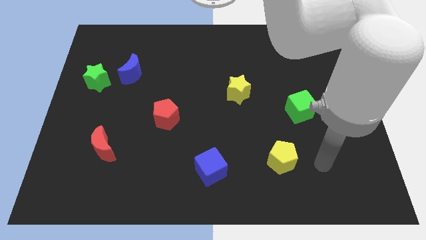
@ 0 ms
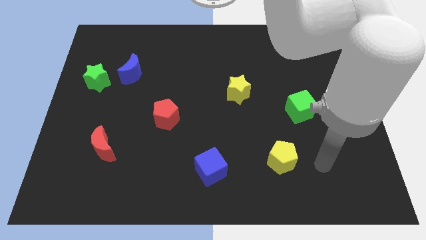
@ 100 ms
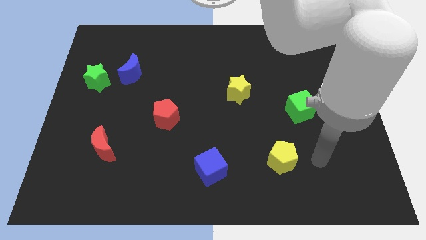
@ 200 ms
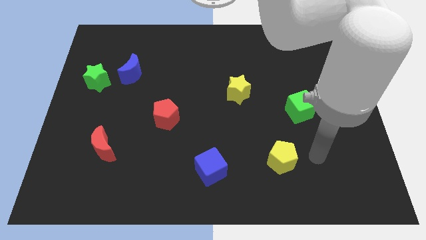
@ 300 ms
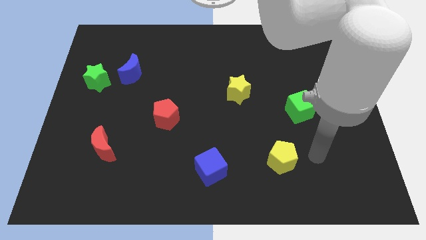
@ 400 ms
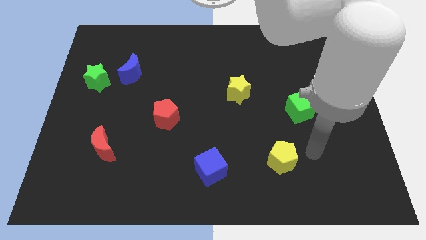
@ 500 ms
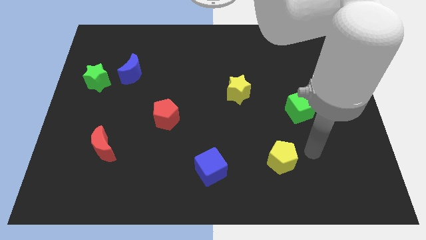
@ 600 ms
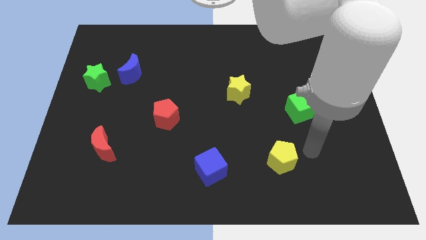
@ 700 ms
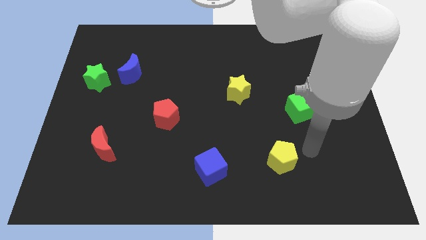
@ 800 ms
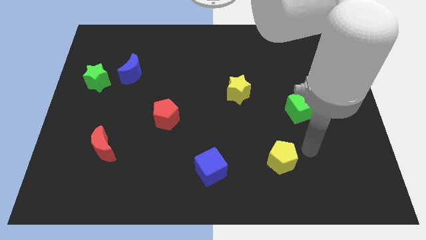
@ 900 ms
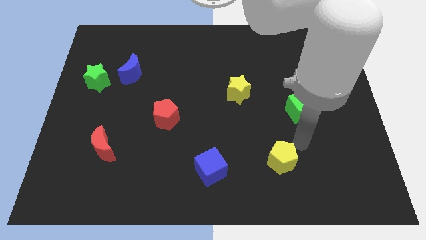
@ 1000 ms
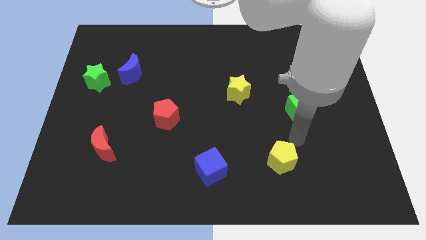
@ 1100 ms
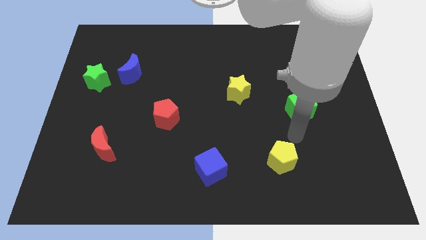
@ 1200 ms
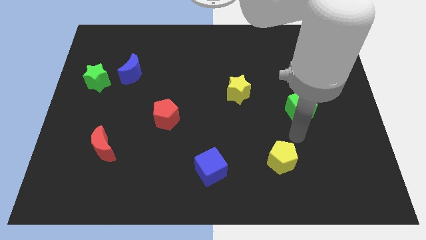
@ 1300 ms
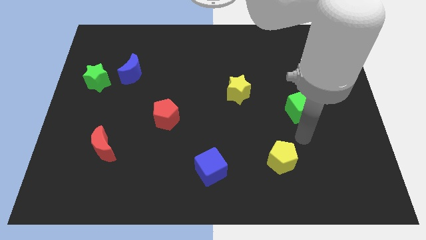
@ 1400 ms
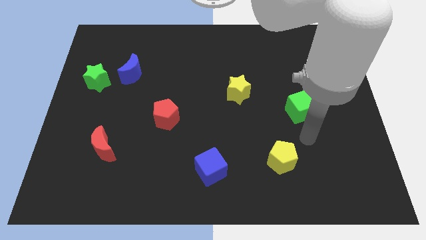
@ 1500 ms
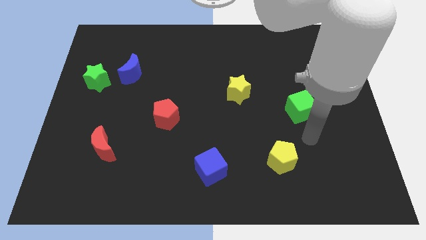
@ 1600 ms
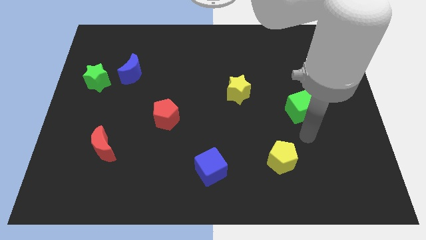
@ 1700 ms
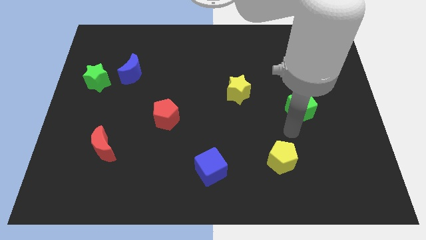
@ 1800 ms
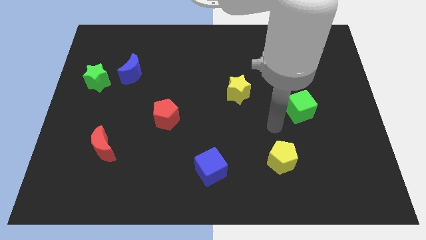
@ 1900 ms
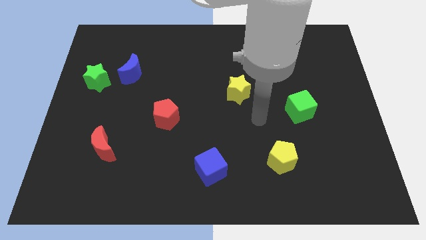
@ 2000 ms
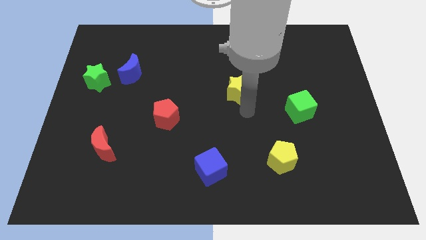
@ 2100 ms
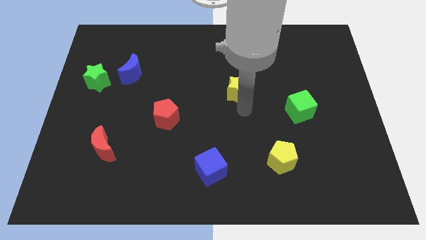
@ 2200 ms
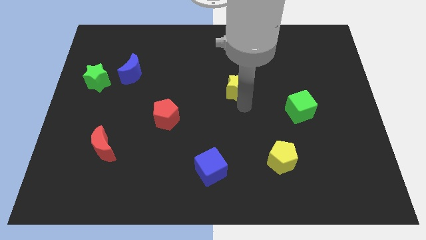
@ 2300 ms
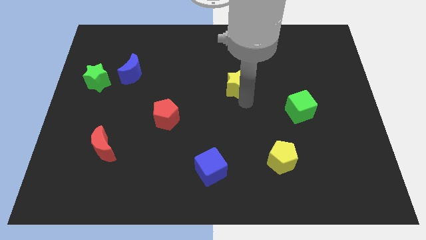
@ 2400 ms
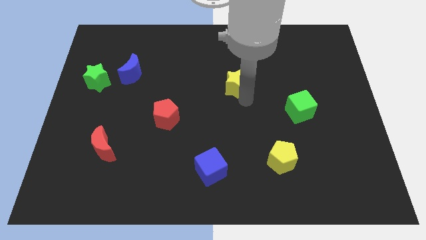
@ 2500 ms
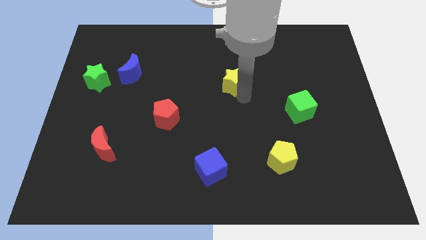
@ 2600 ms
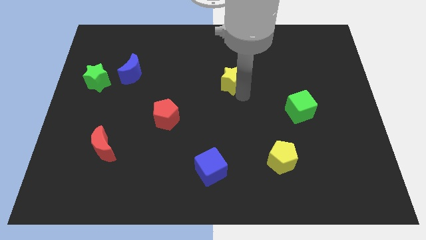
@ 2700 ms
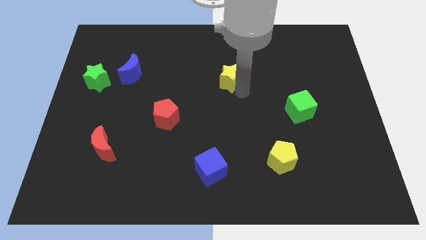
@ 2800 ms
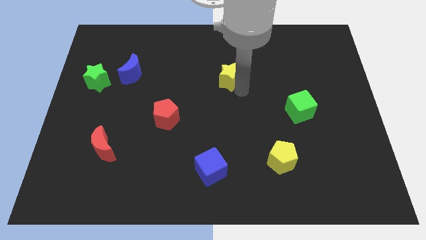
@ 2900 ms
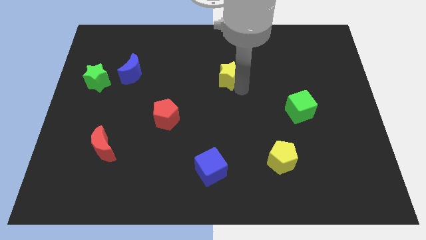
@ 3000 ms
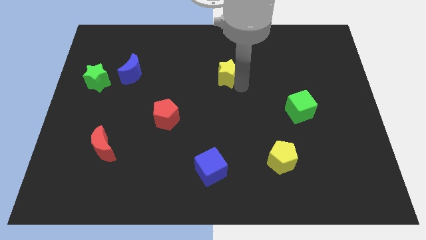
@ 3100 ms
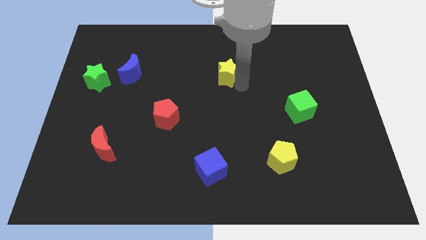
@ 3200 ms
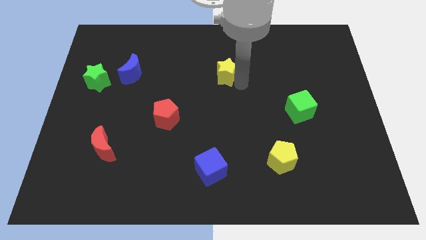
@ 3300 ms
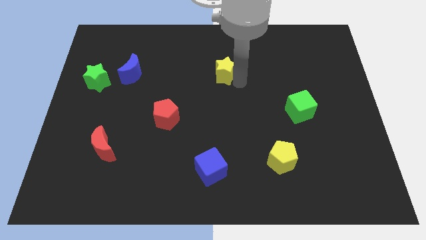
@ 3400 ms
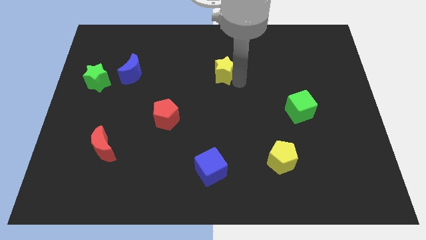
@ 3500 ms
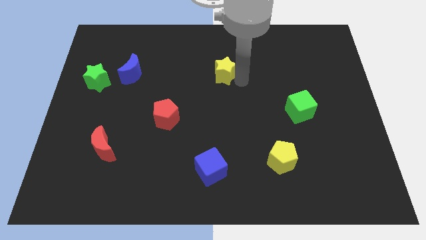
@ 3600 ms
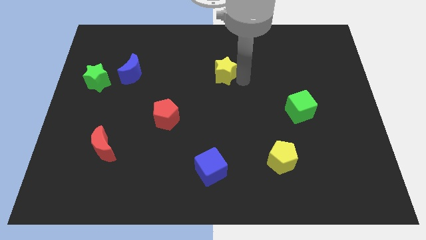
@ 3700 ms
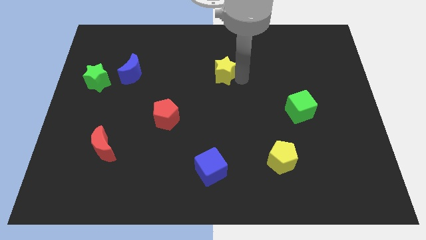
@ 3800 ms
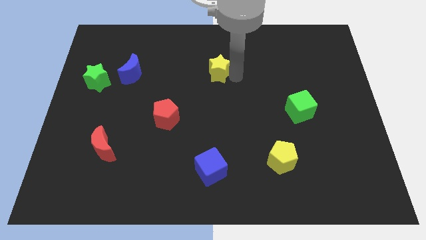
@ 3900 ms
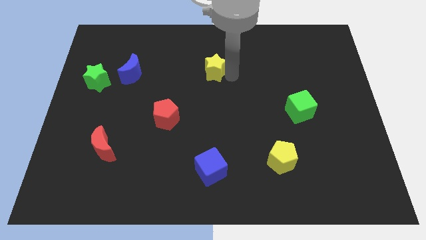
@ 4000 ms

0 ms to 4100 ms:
move the yellow star to the vertical top side of the blue cube

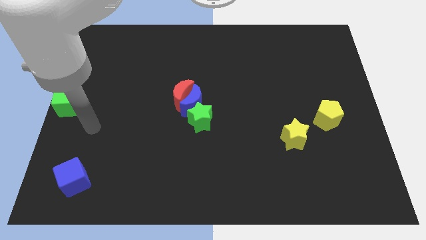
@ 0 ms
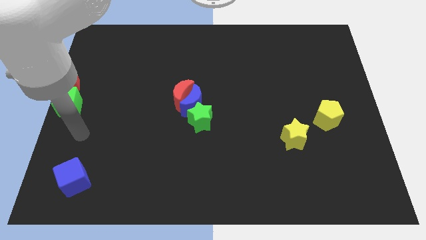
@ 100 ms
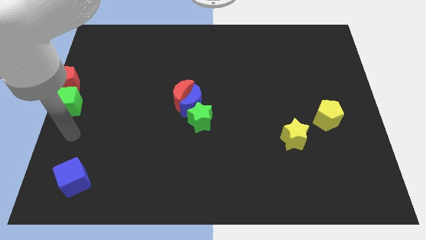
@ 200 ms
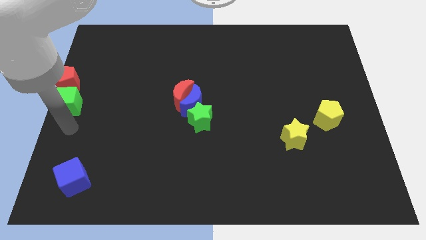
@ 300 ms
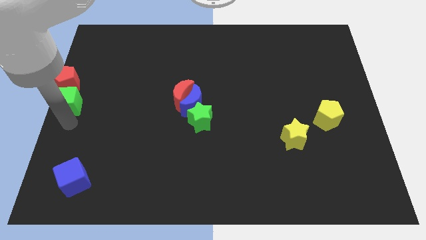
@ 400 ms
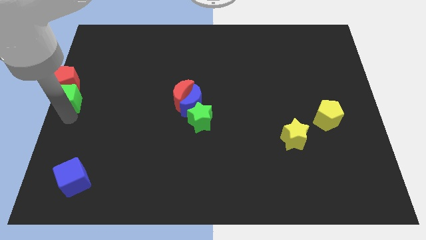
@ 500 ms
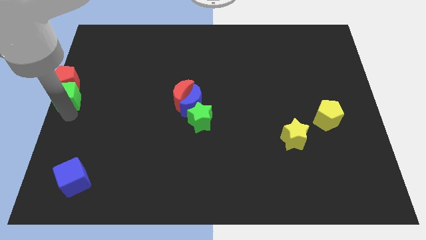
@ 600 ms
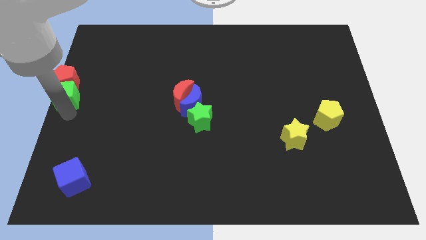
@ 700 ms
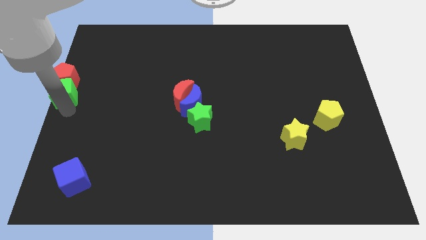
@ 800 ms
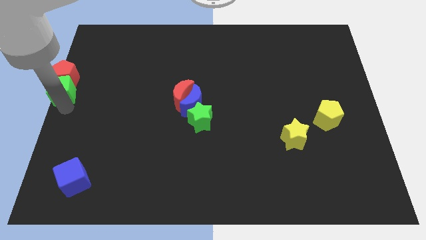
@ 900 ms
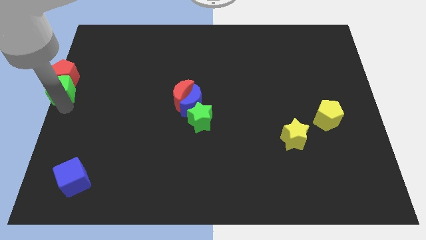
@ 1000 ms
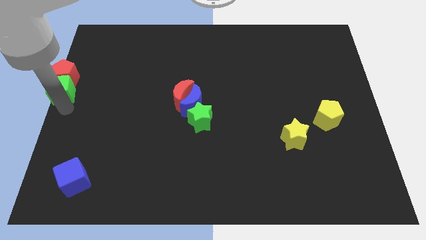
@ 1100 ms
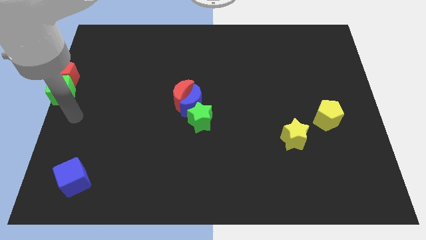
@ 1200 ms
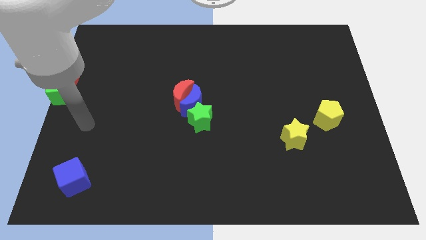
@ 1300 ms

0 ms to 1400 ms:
push the green cube with the red pentagon towards the left center of the board

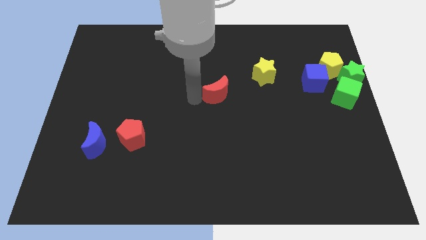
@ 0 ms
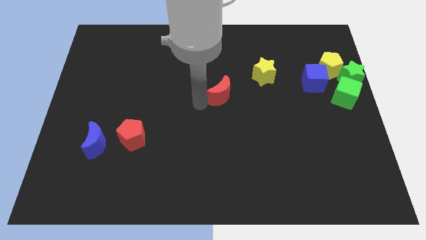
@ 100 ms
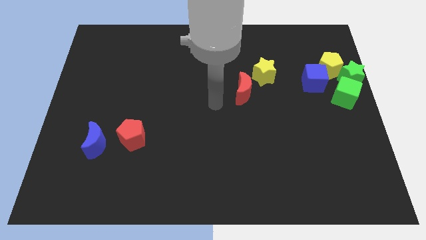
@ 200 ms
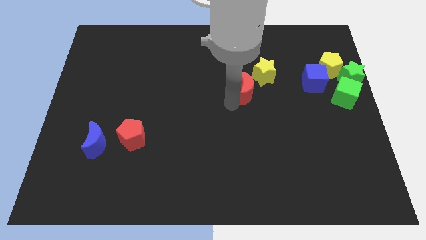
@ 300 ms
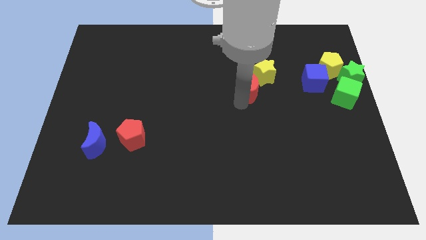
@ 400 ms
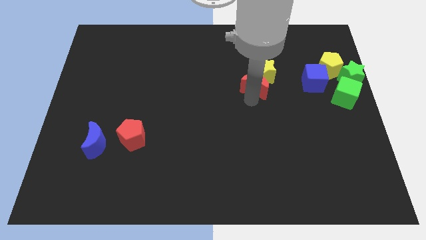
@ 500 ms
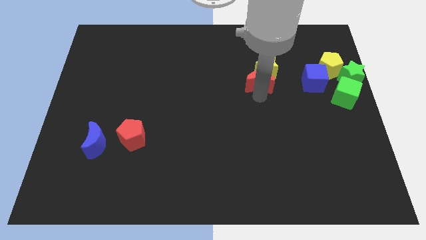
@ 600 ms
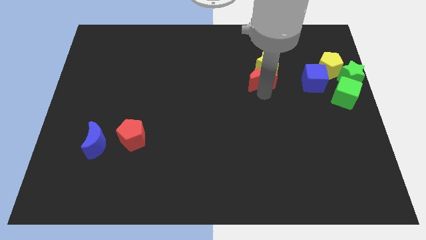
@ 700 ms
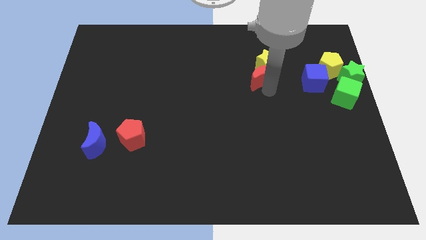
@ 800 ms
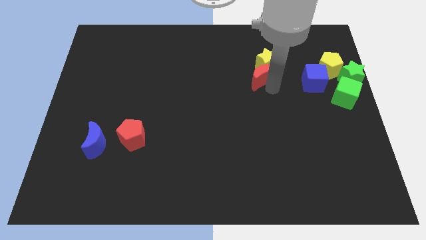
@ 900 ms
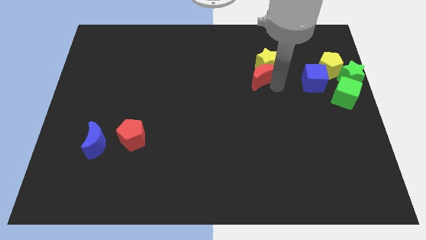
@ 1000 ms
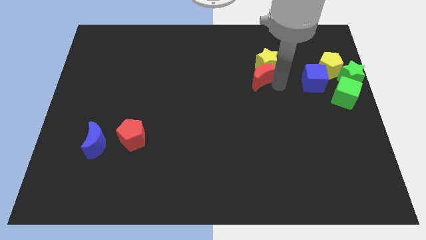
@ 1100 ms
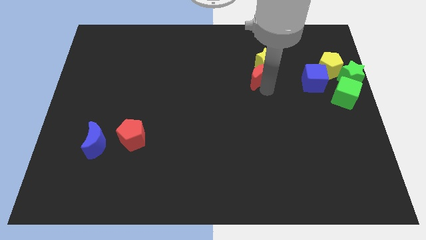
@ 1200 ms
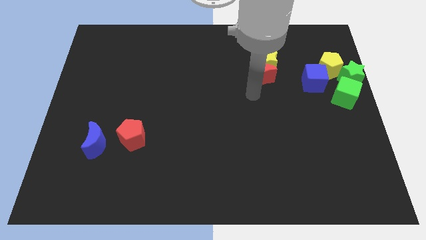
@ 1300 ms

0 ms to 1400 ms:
push the red moon into the yellow star

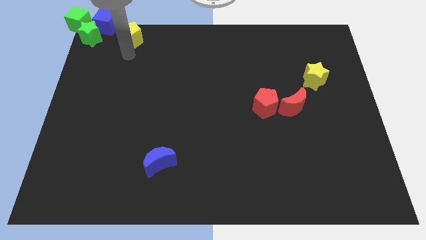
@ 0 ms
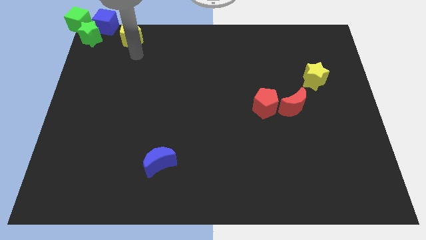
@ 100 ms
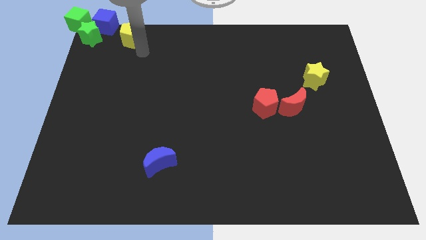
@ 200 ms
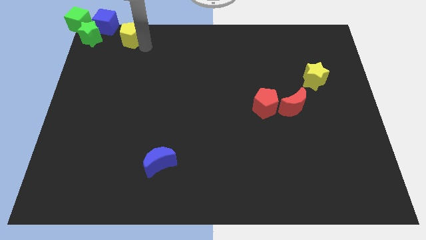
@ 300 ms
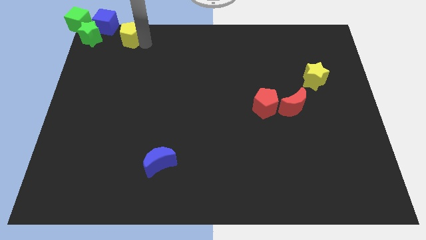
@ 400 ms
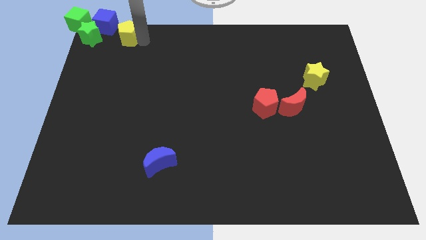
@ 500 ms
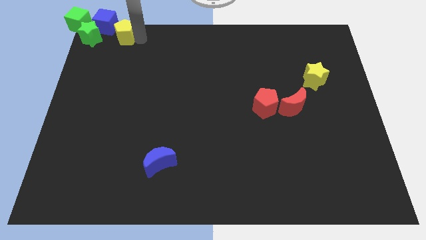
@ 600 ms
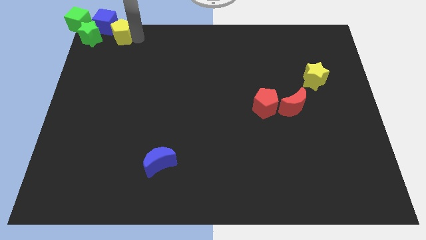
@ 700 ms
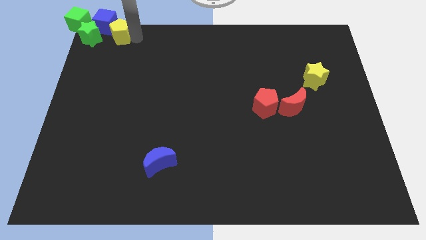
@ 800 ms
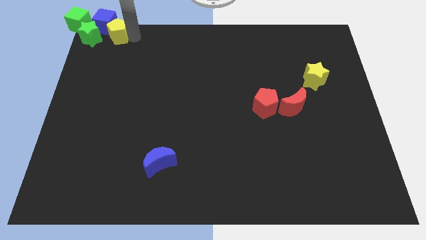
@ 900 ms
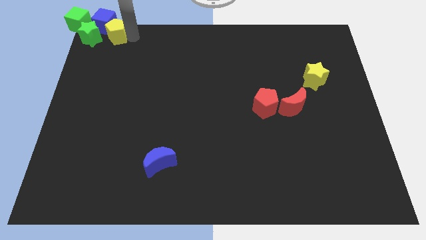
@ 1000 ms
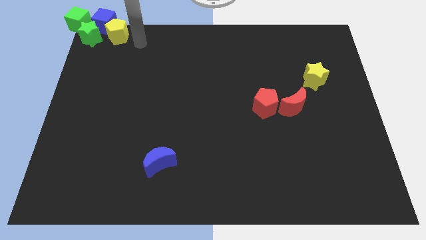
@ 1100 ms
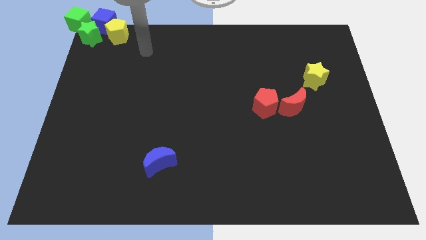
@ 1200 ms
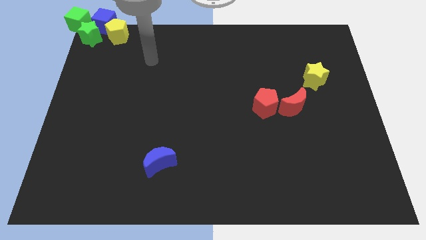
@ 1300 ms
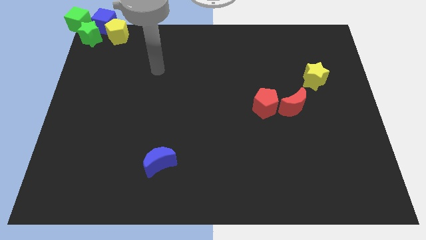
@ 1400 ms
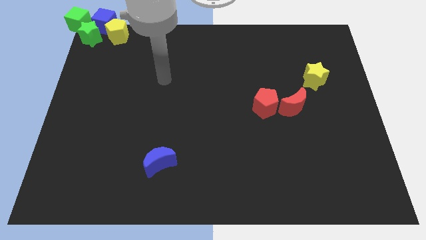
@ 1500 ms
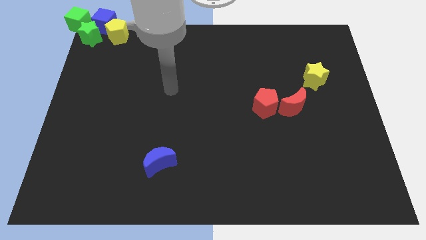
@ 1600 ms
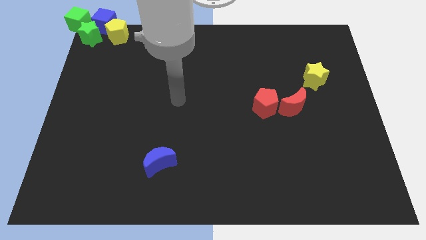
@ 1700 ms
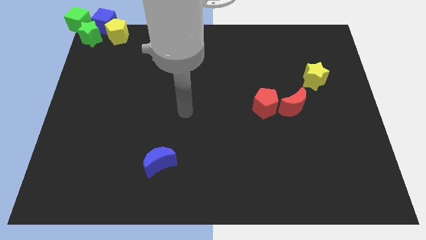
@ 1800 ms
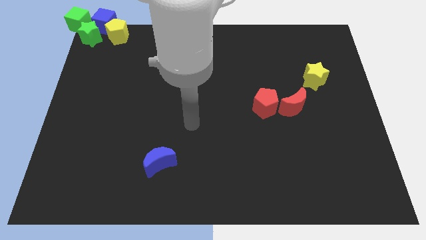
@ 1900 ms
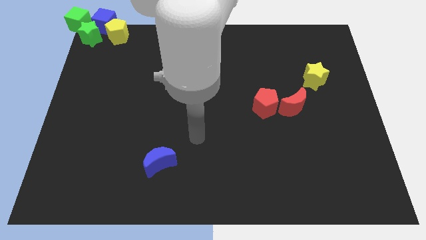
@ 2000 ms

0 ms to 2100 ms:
move the yellow pentagon to the right side of the blue cube
